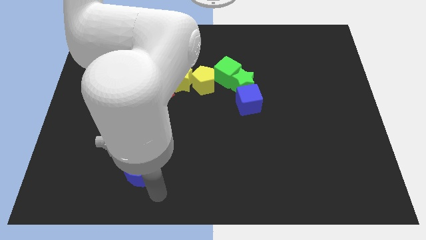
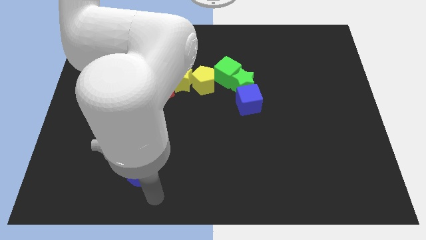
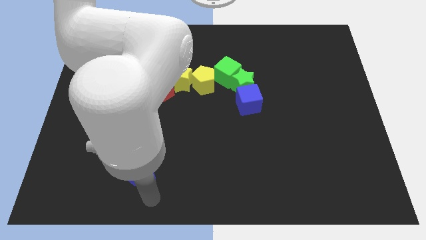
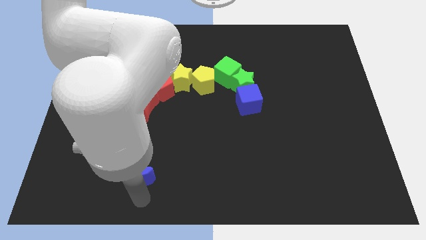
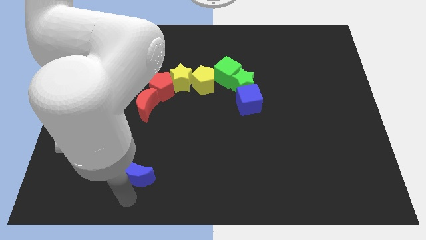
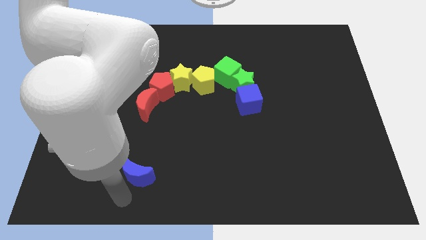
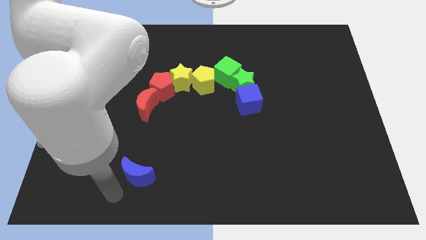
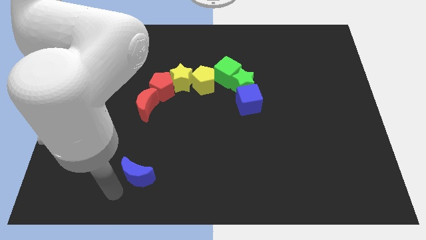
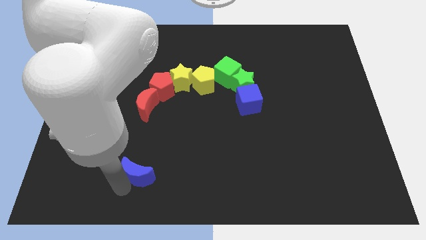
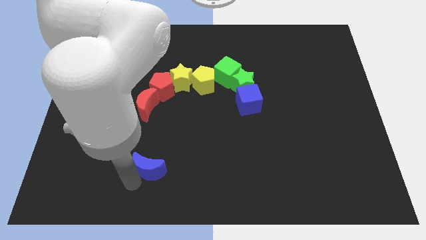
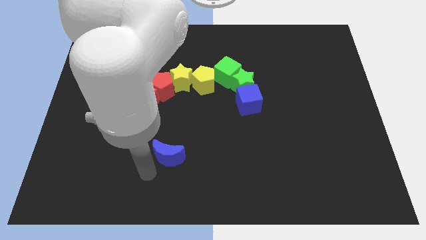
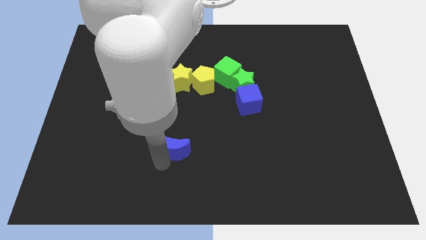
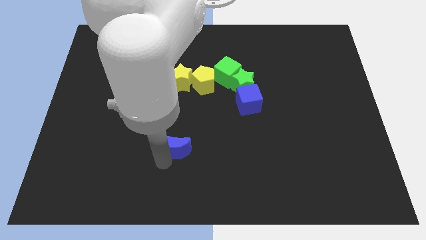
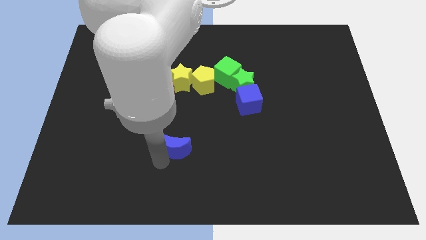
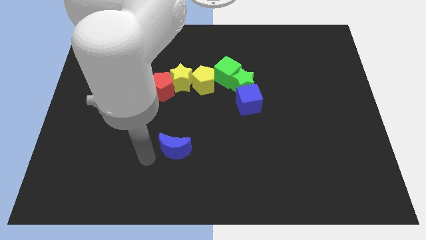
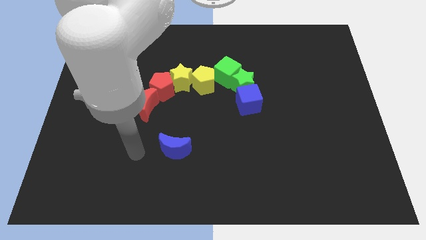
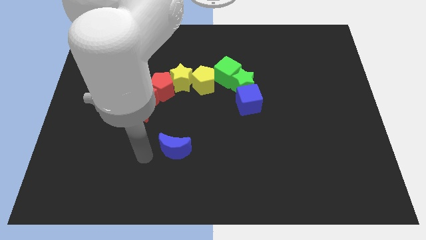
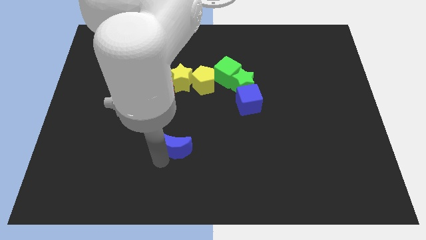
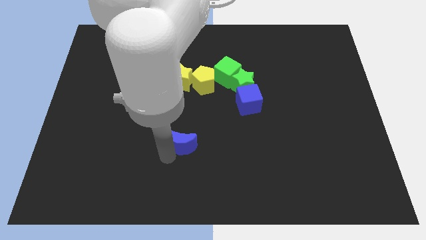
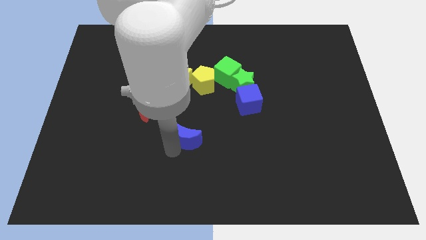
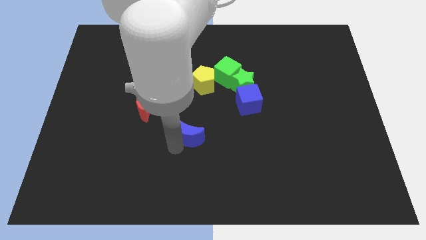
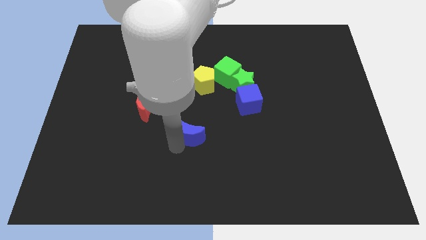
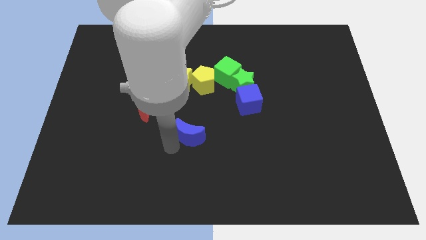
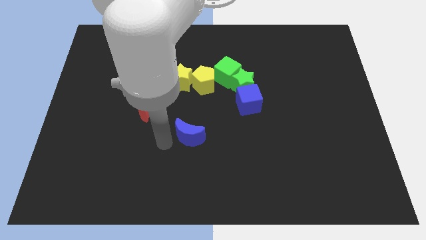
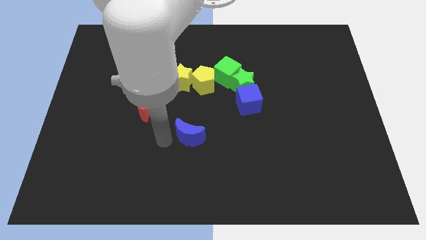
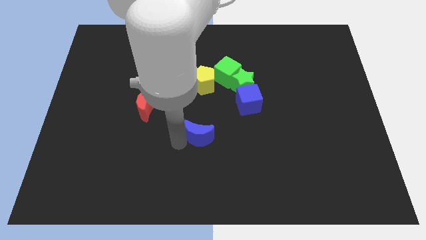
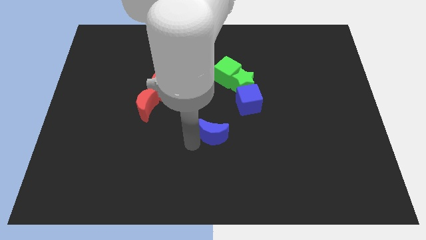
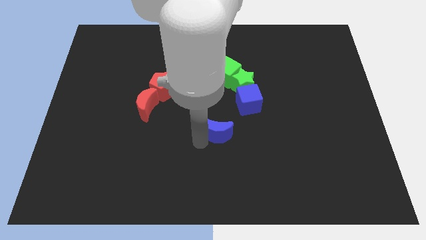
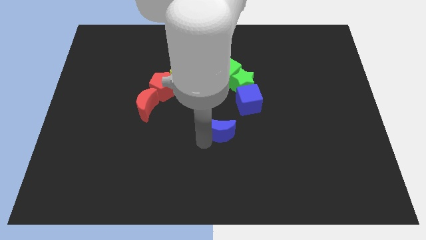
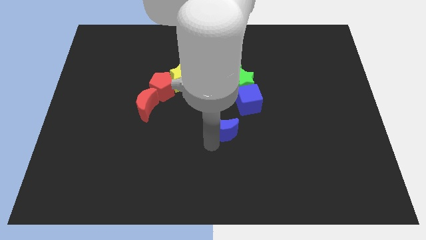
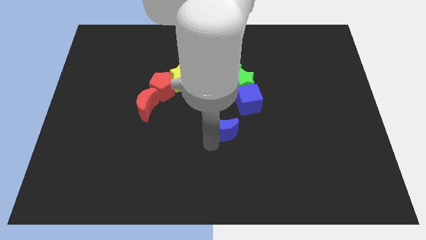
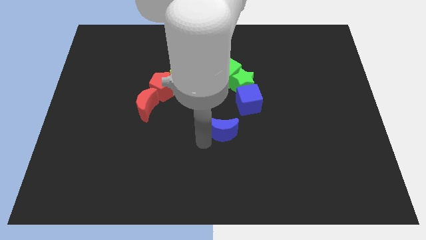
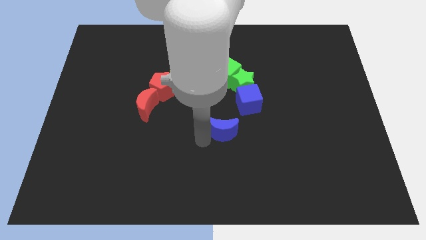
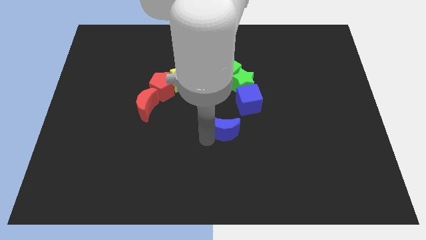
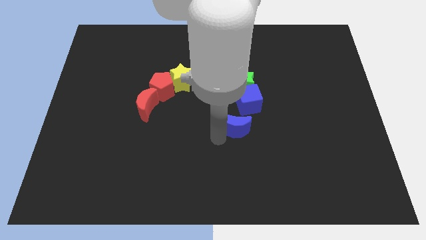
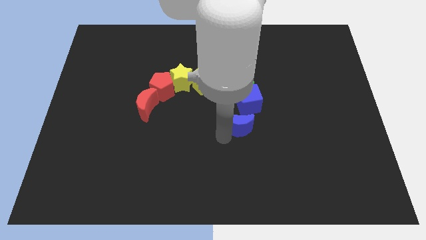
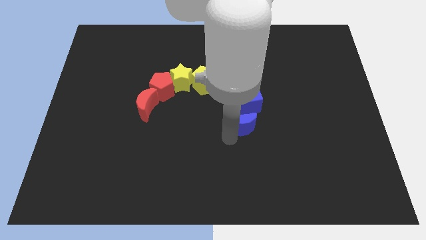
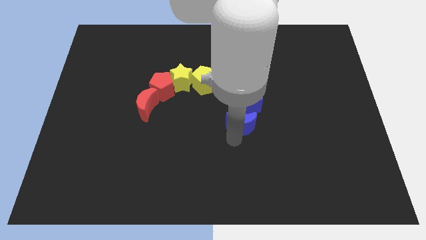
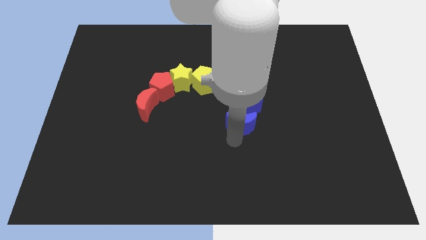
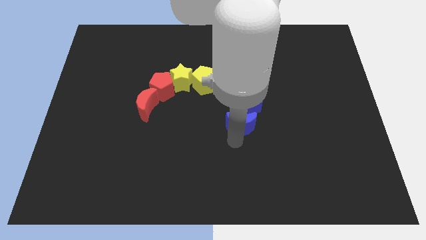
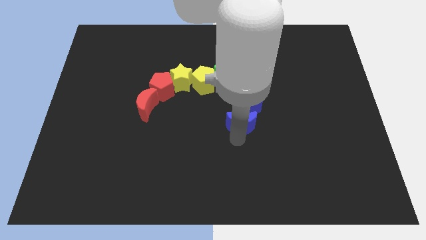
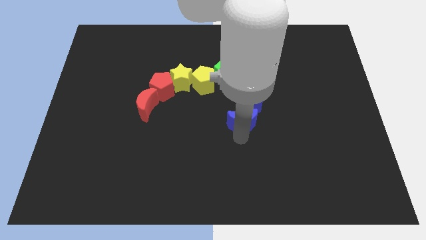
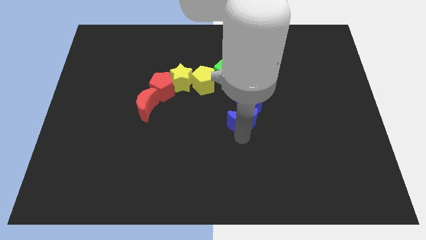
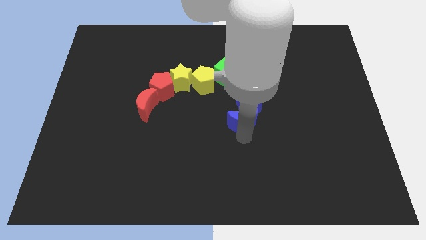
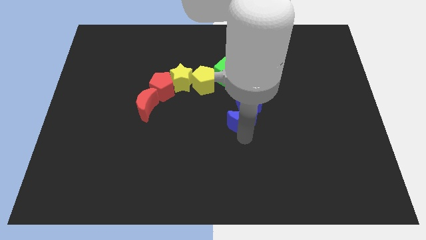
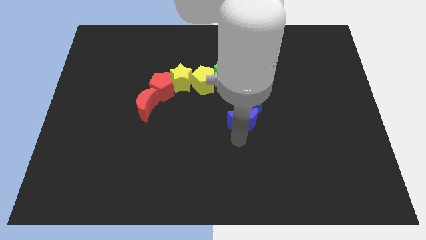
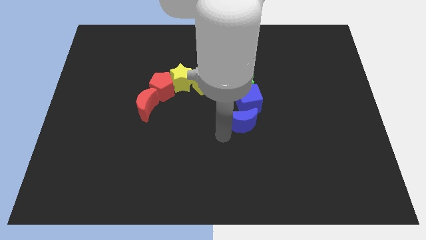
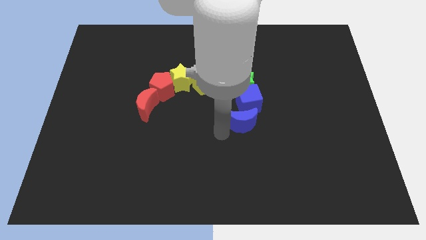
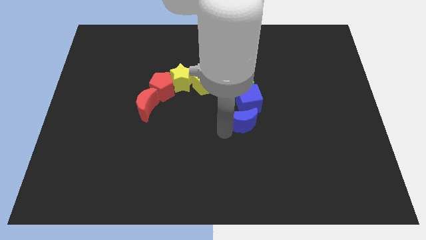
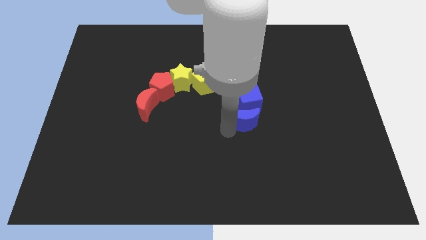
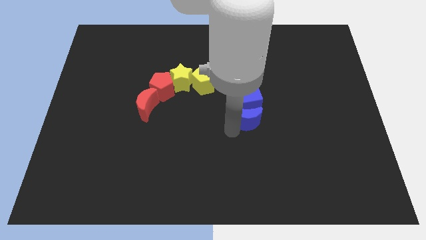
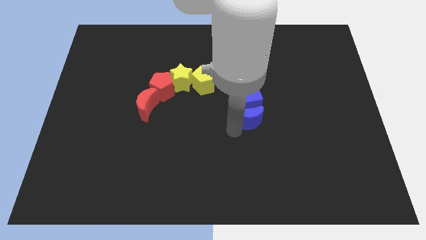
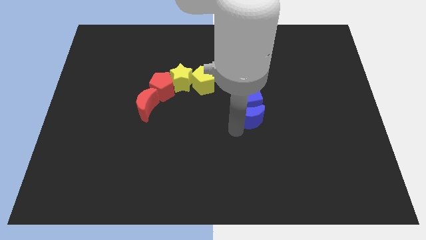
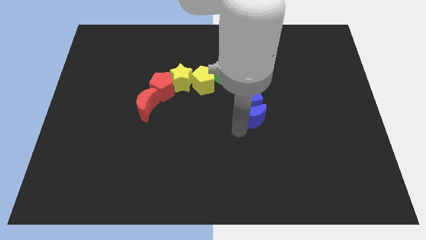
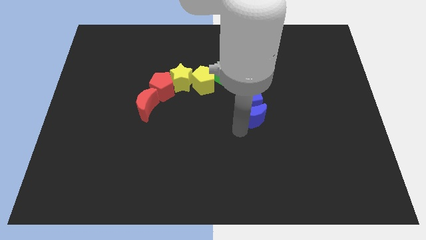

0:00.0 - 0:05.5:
place the blue moon to the bottom of the blue cube

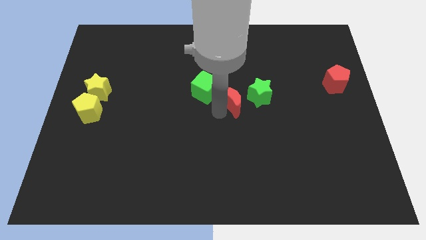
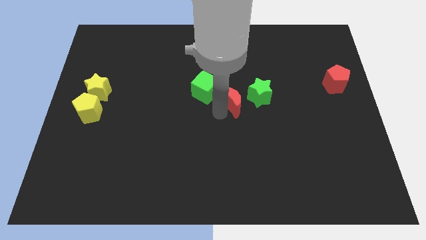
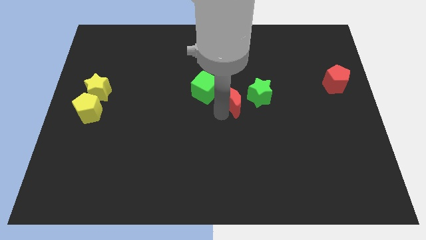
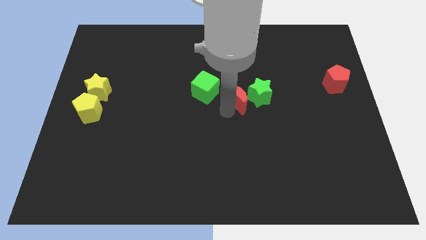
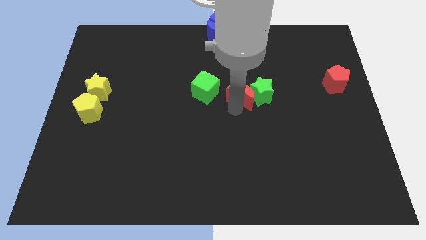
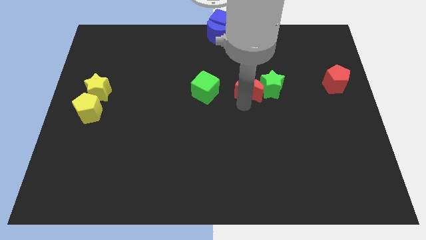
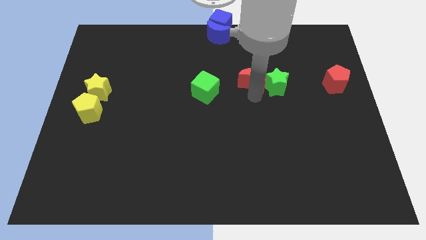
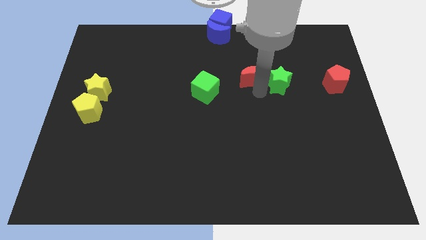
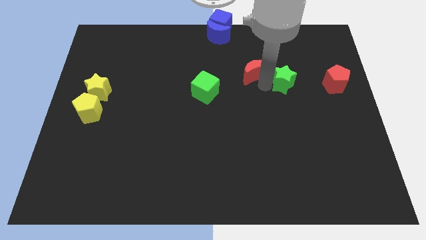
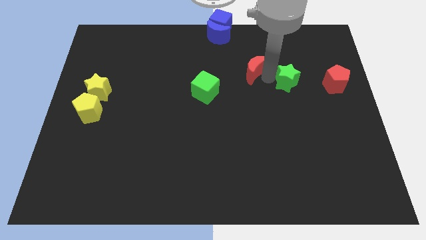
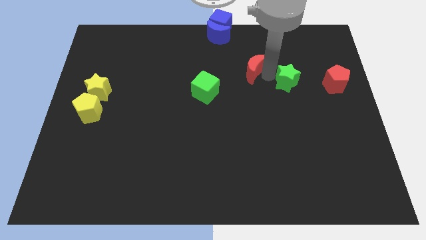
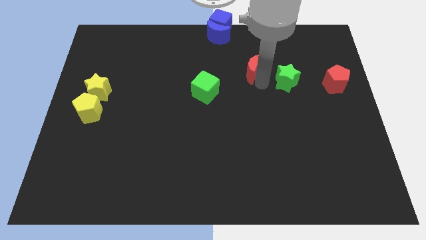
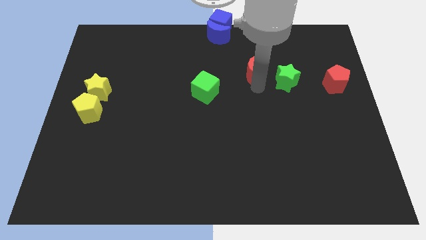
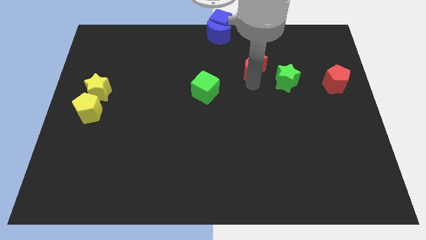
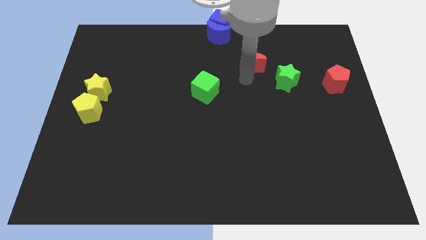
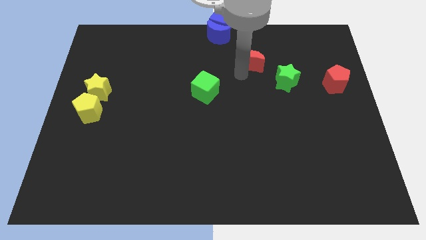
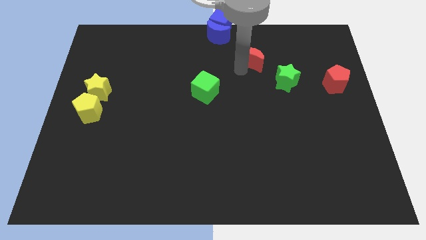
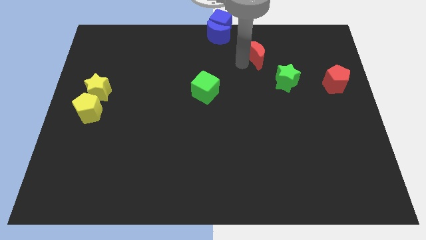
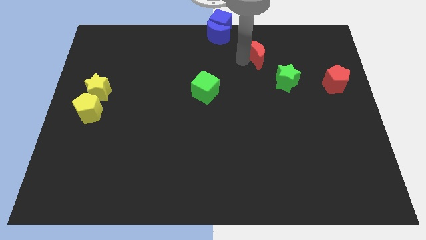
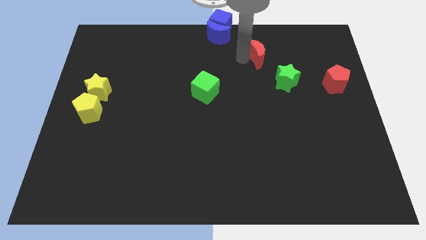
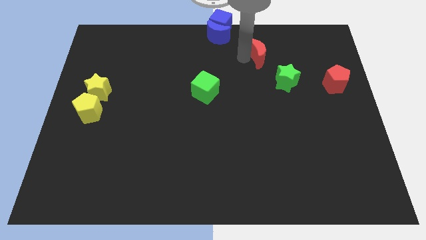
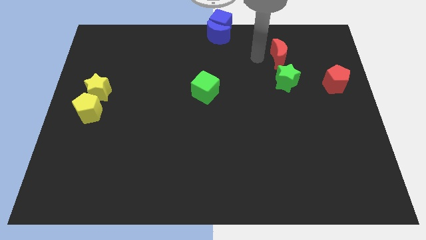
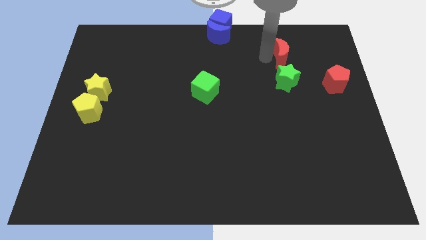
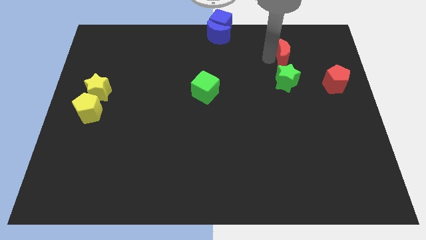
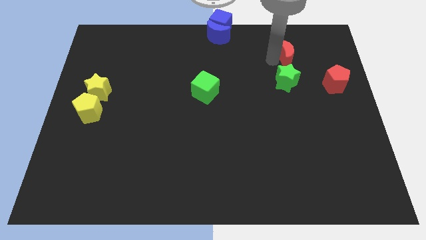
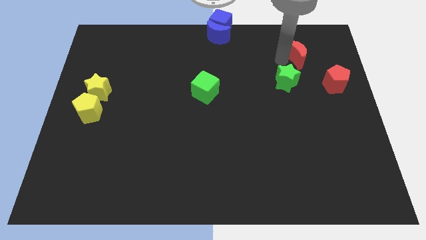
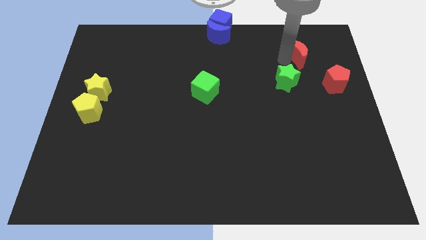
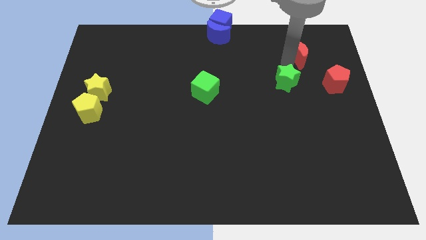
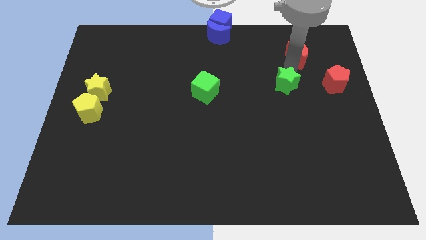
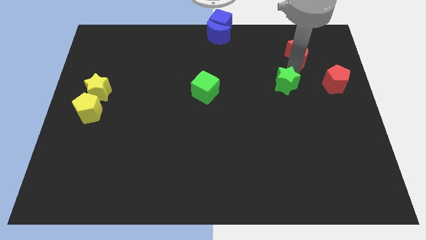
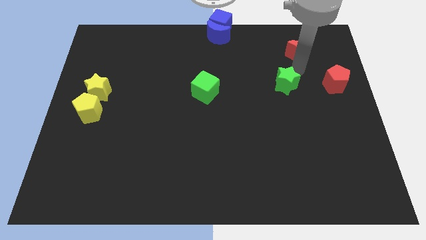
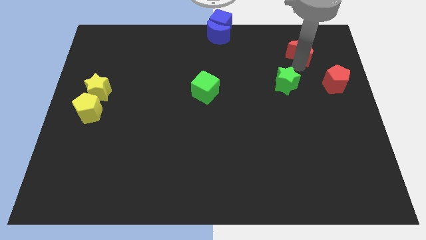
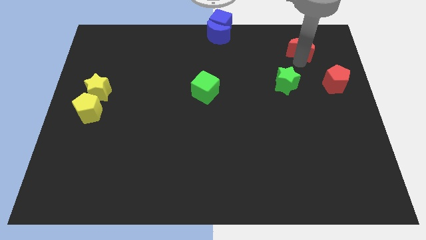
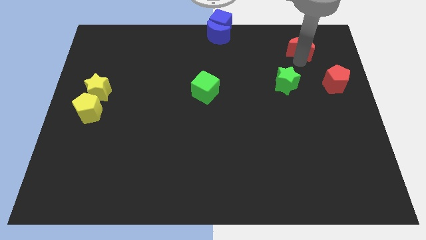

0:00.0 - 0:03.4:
make a triangle out of red blocks and the green star
